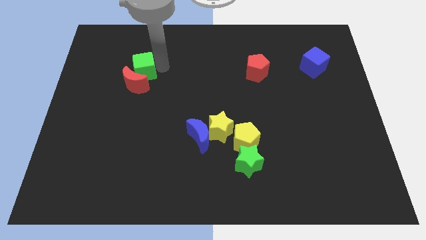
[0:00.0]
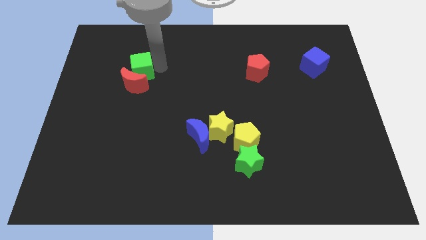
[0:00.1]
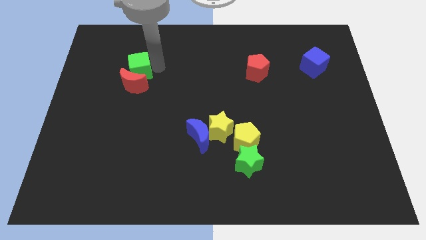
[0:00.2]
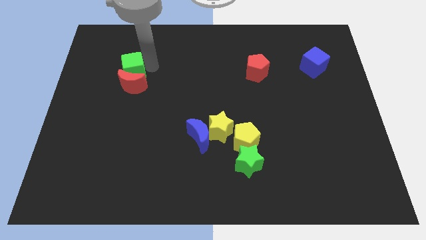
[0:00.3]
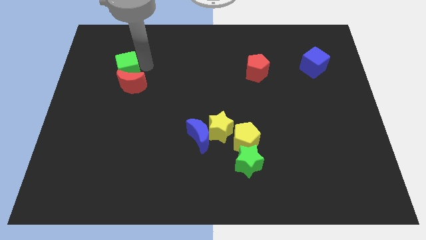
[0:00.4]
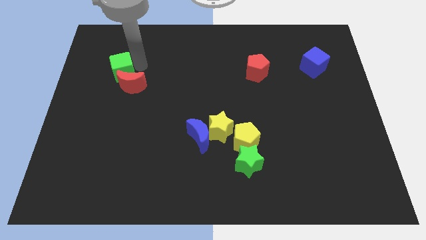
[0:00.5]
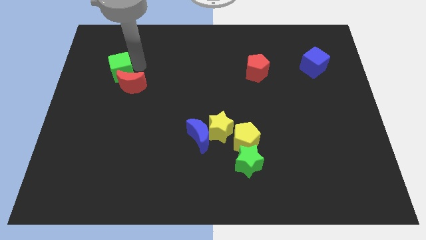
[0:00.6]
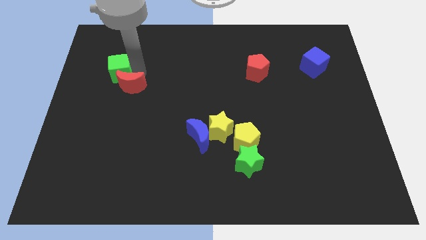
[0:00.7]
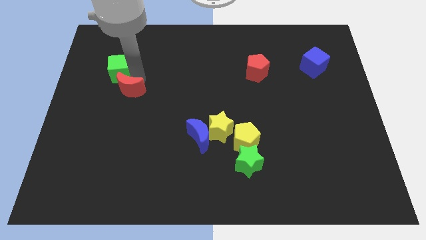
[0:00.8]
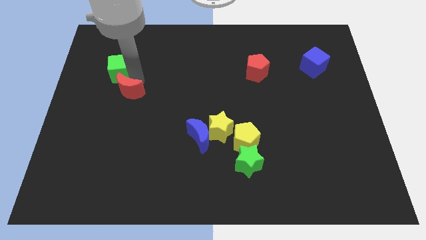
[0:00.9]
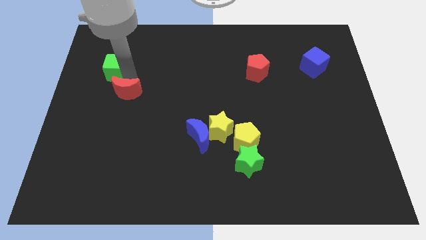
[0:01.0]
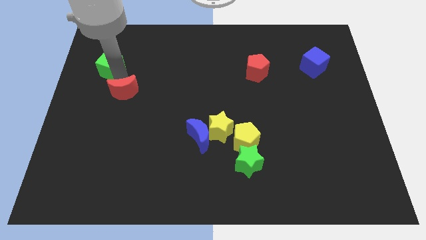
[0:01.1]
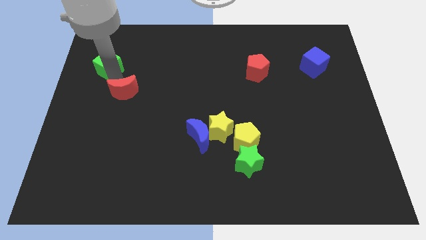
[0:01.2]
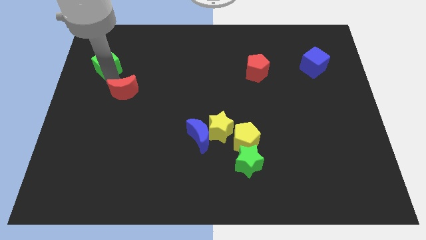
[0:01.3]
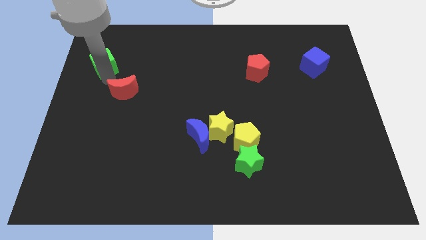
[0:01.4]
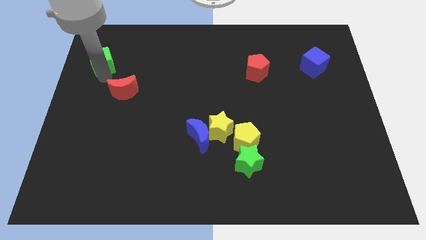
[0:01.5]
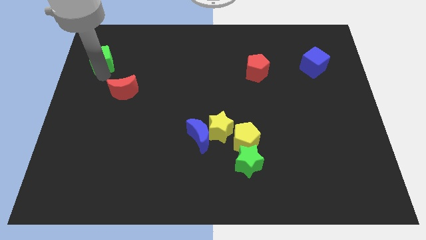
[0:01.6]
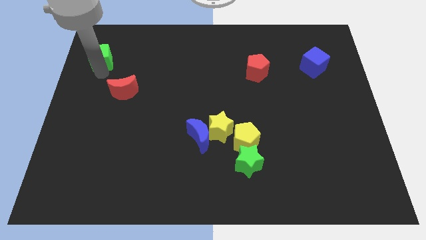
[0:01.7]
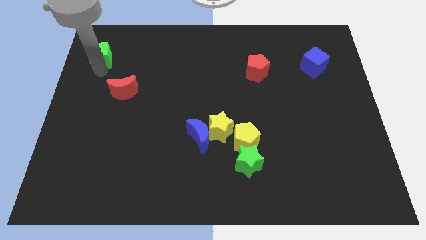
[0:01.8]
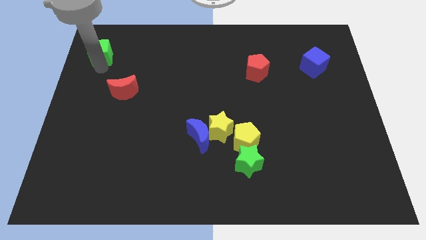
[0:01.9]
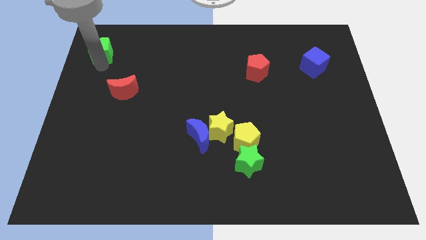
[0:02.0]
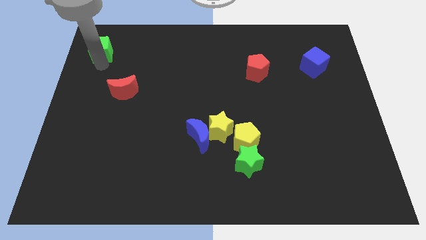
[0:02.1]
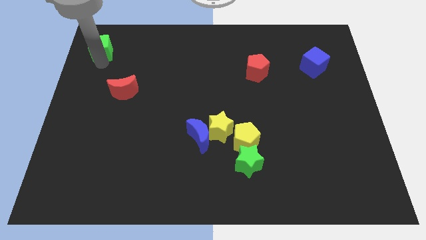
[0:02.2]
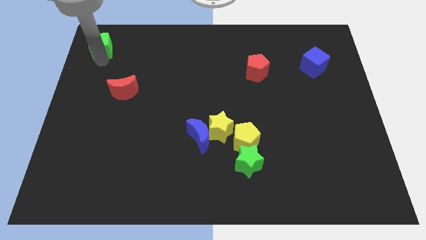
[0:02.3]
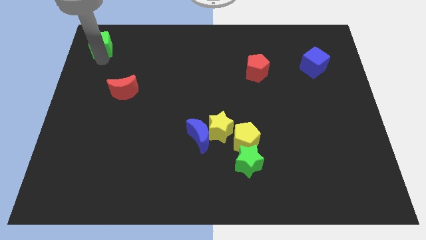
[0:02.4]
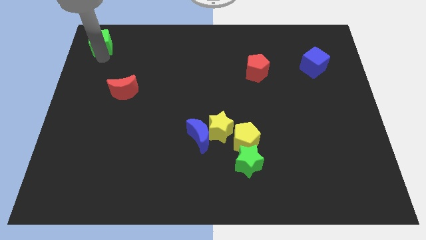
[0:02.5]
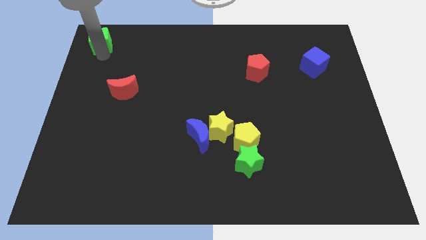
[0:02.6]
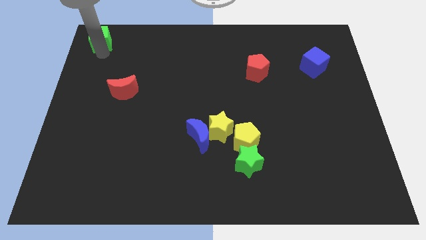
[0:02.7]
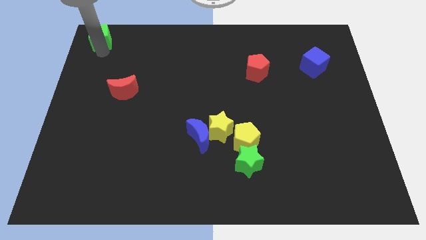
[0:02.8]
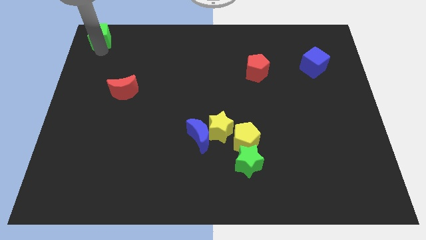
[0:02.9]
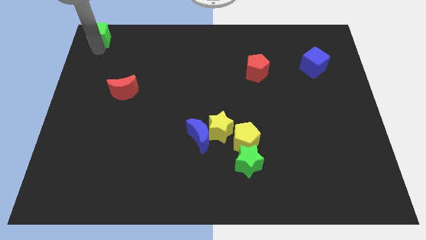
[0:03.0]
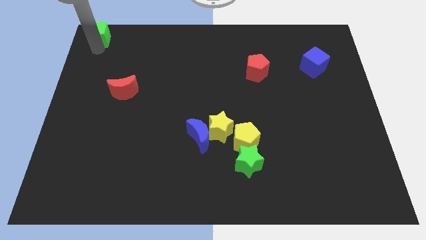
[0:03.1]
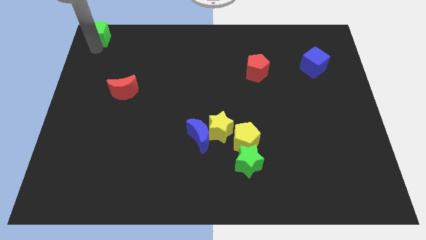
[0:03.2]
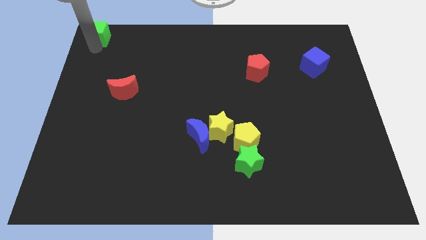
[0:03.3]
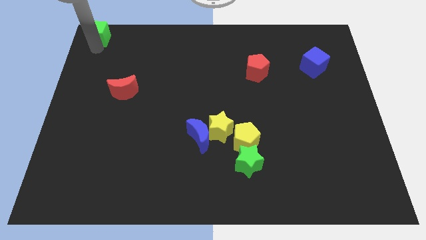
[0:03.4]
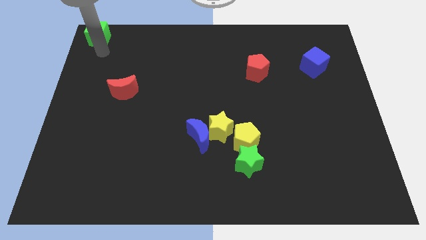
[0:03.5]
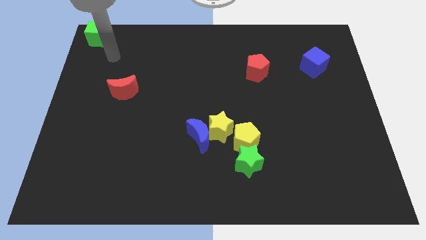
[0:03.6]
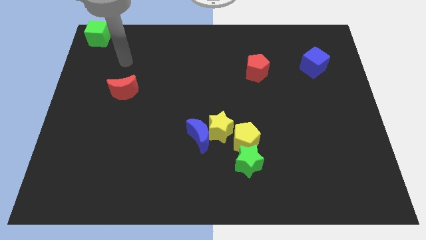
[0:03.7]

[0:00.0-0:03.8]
push the green cube to the top left corner of the board

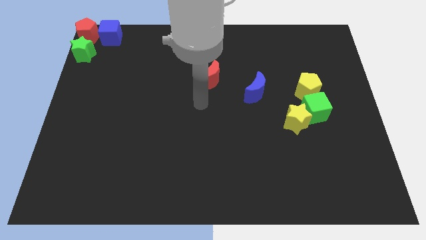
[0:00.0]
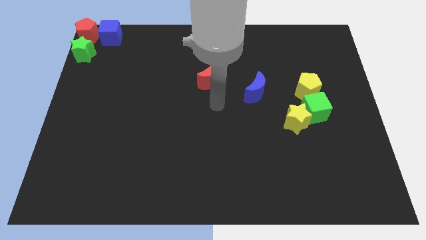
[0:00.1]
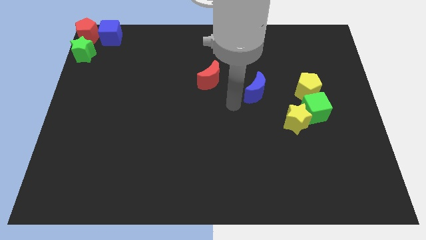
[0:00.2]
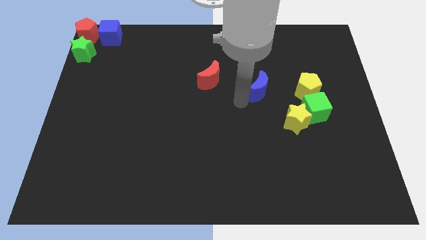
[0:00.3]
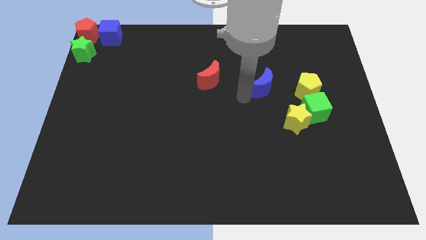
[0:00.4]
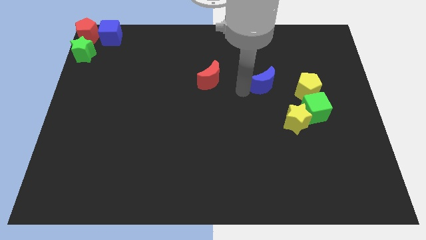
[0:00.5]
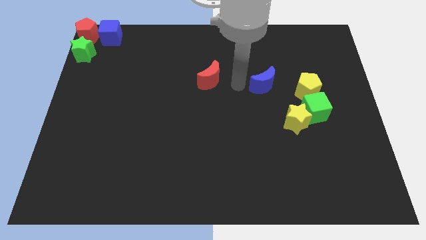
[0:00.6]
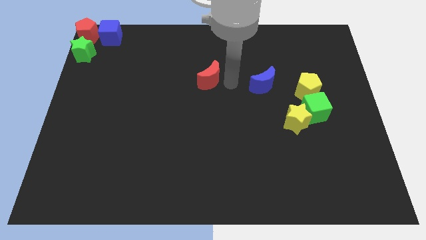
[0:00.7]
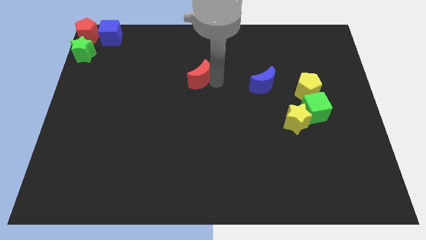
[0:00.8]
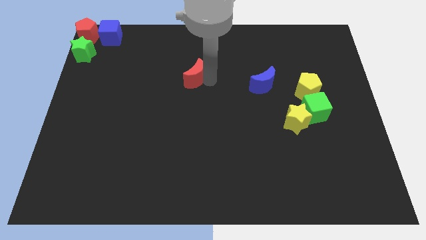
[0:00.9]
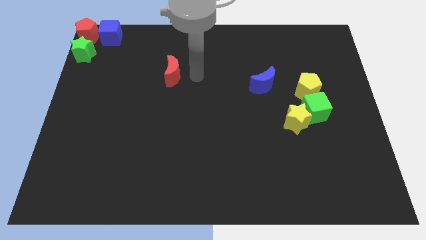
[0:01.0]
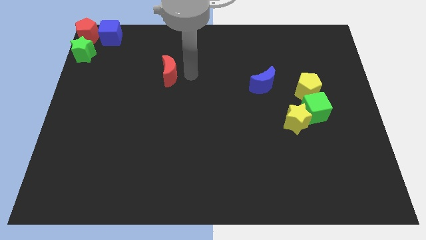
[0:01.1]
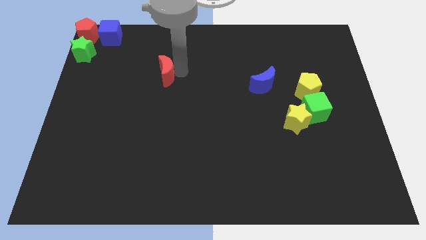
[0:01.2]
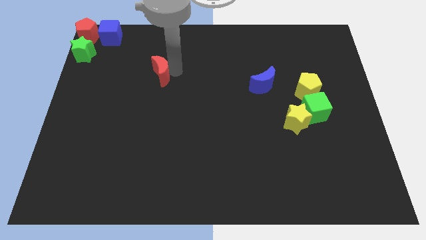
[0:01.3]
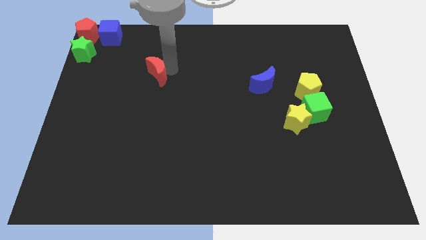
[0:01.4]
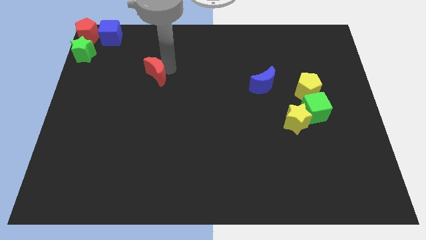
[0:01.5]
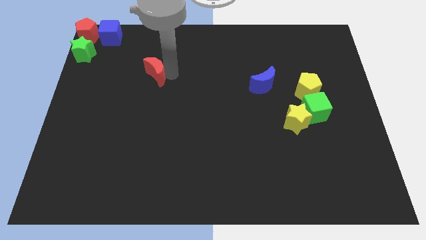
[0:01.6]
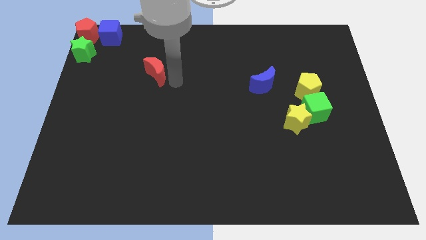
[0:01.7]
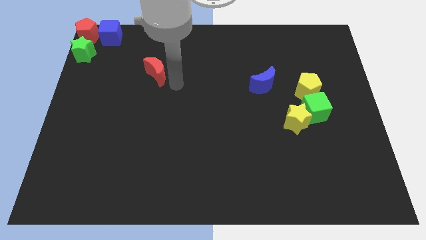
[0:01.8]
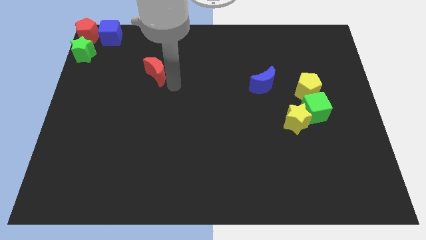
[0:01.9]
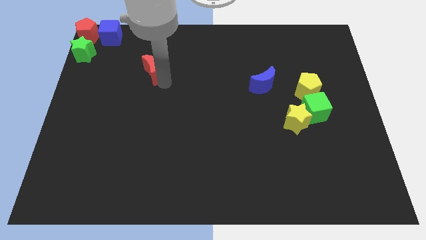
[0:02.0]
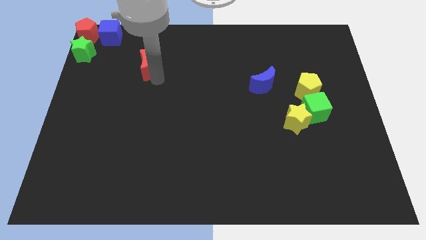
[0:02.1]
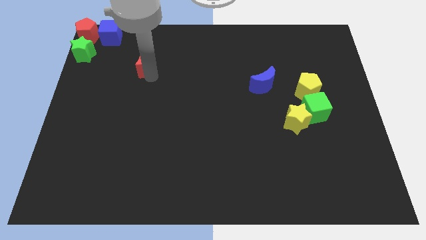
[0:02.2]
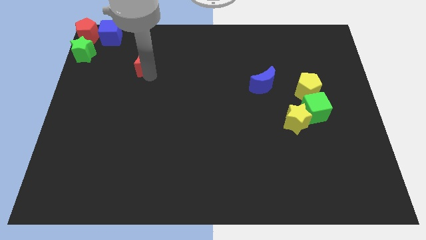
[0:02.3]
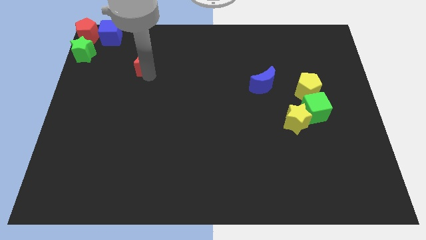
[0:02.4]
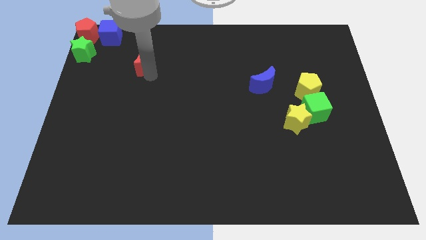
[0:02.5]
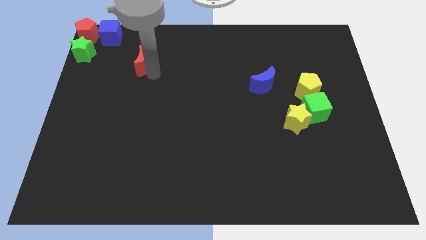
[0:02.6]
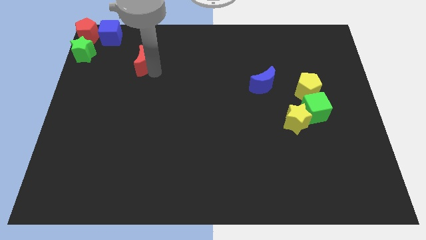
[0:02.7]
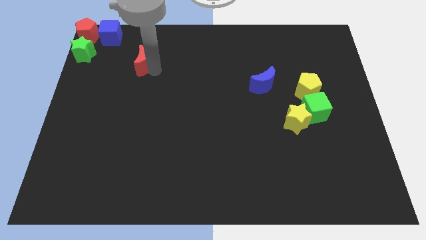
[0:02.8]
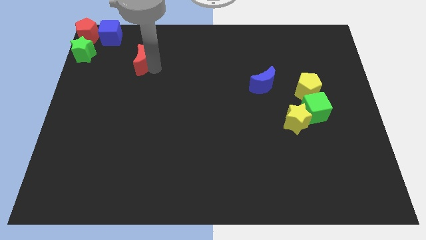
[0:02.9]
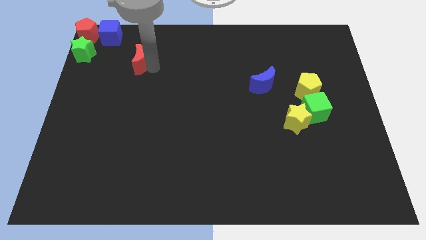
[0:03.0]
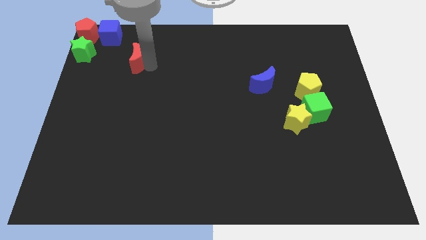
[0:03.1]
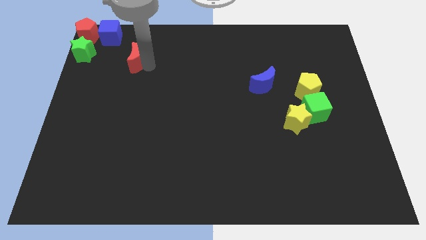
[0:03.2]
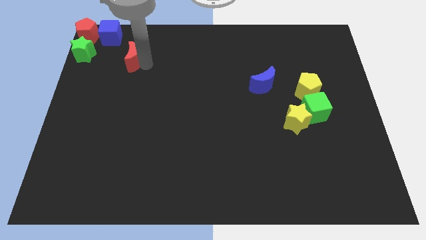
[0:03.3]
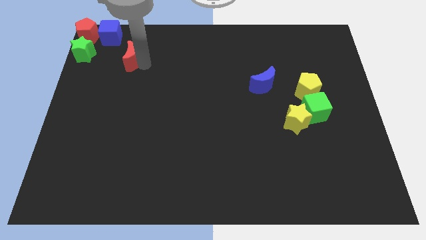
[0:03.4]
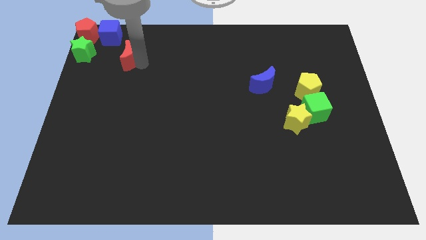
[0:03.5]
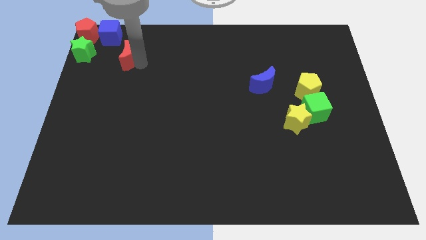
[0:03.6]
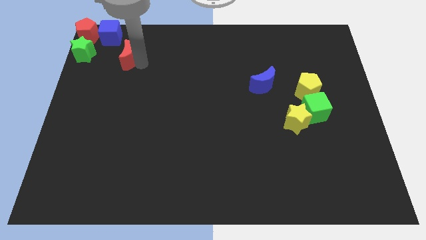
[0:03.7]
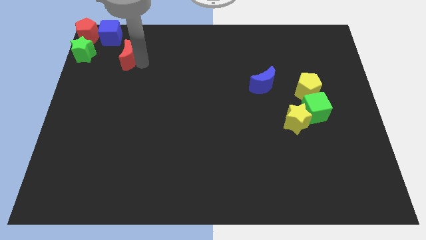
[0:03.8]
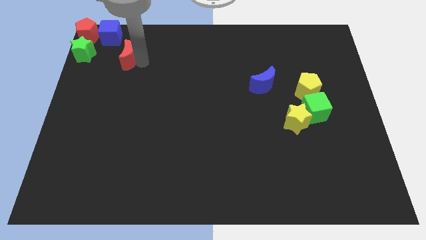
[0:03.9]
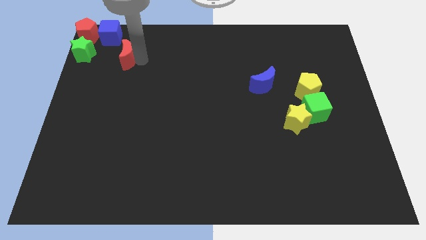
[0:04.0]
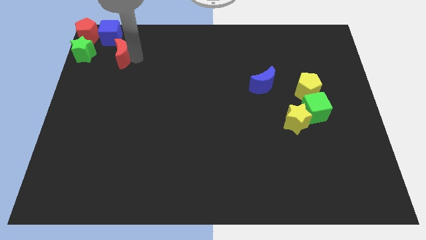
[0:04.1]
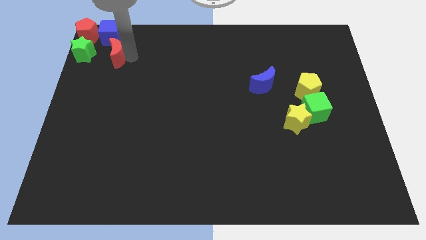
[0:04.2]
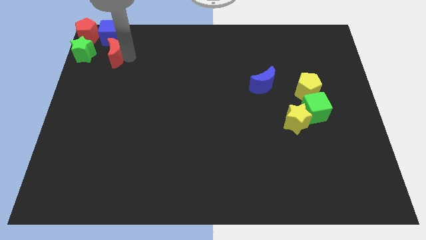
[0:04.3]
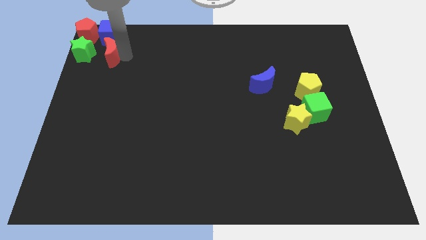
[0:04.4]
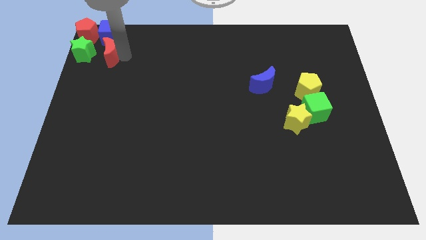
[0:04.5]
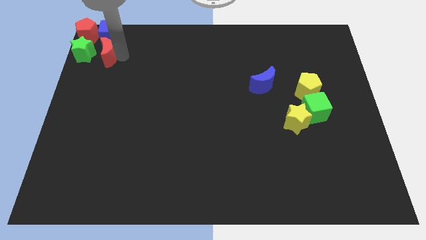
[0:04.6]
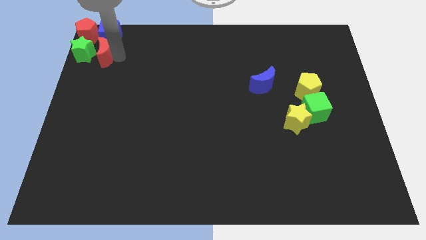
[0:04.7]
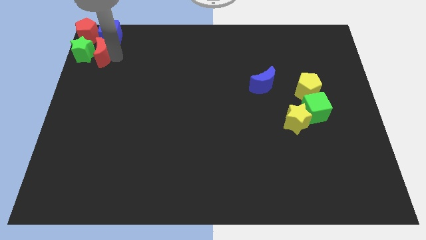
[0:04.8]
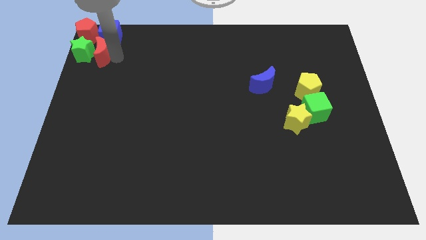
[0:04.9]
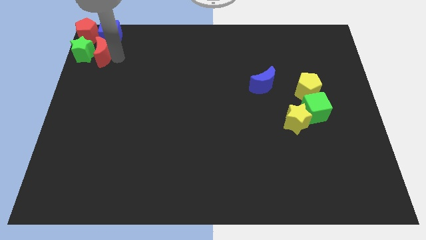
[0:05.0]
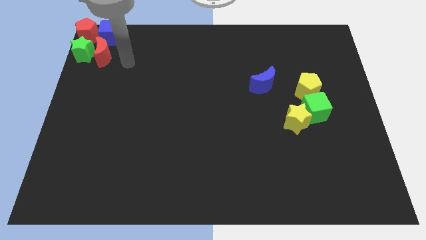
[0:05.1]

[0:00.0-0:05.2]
move red moon towards top left below blue cube
